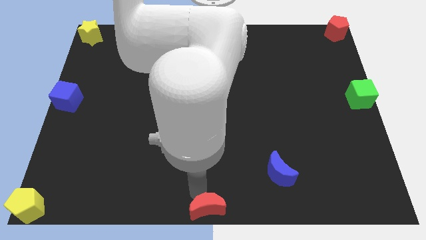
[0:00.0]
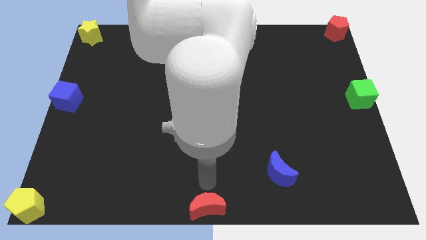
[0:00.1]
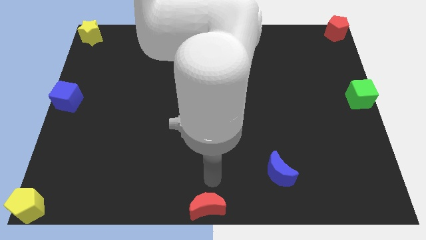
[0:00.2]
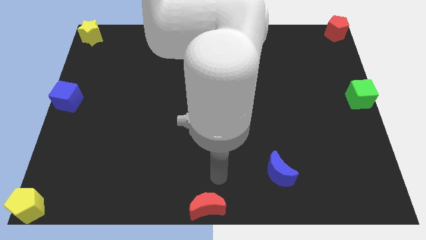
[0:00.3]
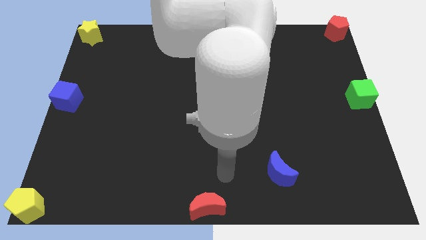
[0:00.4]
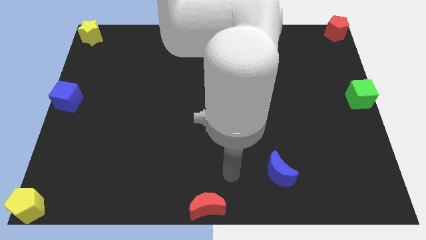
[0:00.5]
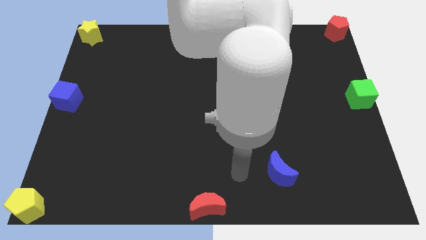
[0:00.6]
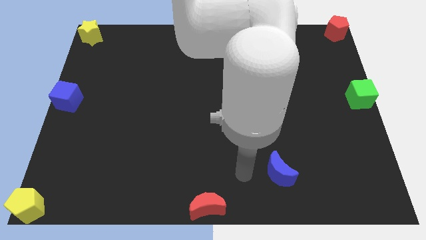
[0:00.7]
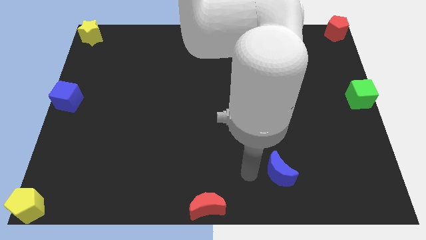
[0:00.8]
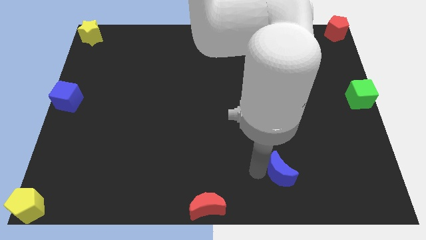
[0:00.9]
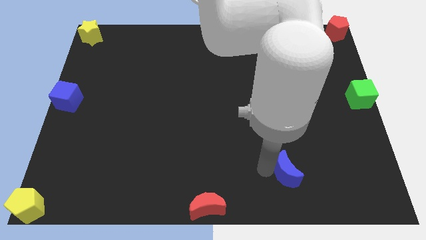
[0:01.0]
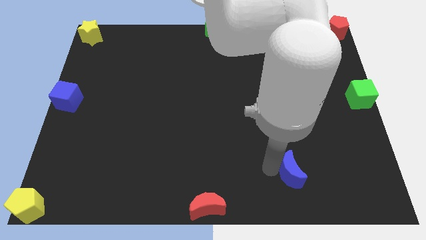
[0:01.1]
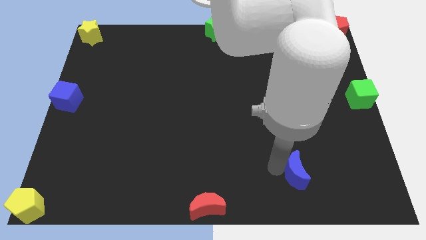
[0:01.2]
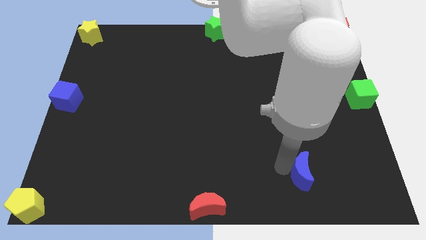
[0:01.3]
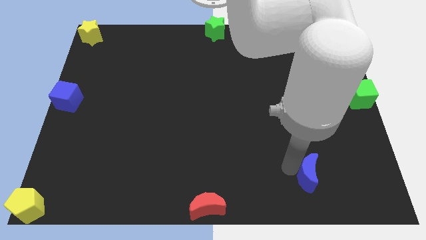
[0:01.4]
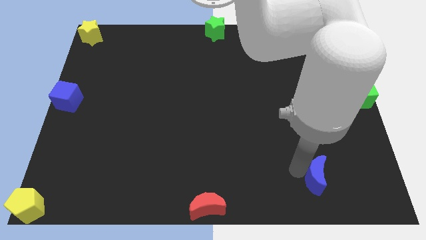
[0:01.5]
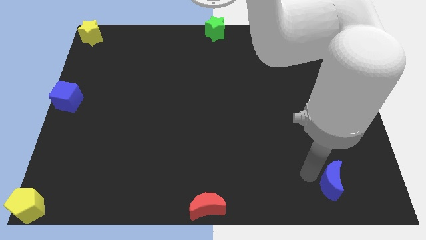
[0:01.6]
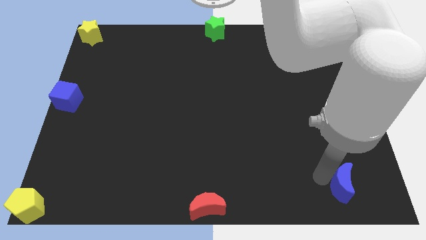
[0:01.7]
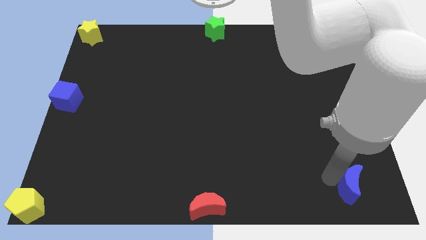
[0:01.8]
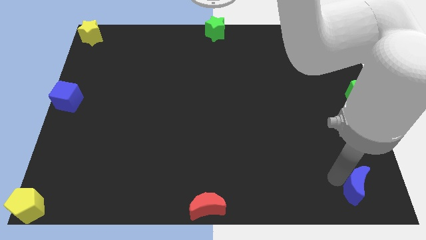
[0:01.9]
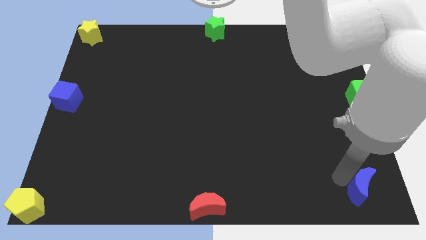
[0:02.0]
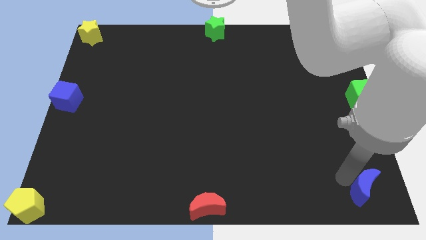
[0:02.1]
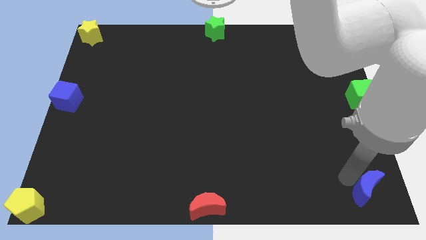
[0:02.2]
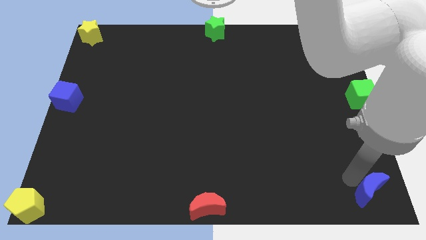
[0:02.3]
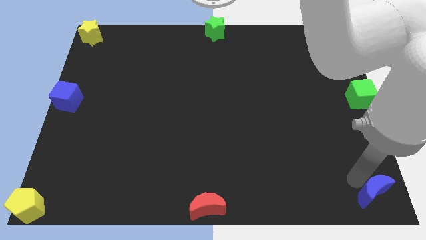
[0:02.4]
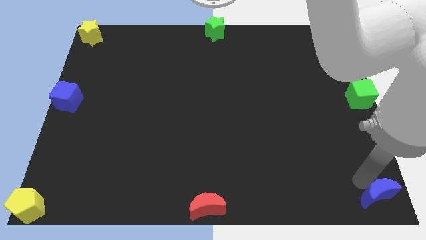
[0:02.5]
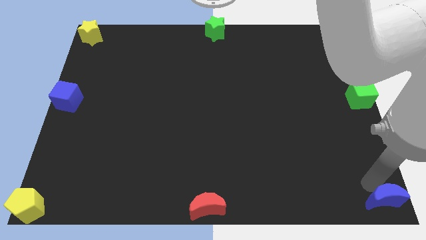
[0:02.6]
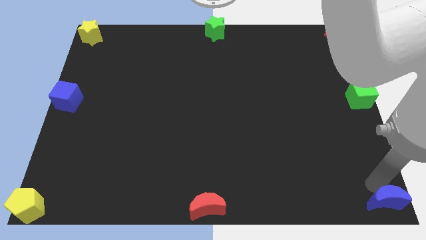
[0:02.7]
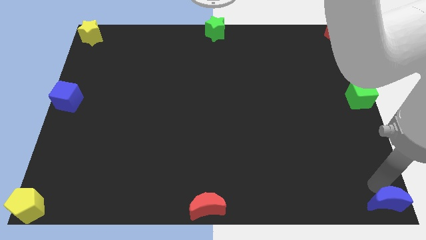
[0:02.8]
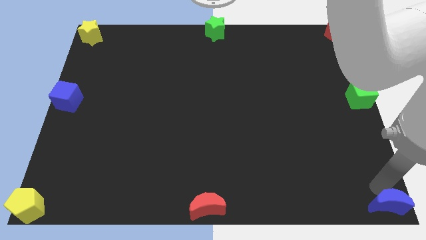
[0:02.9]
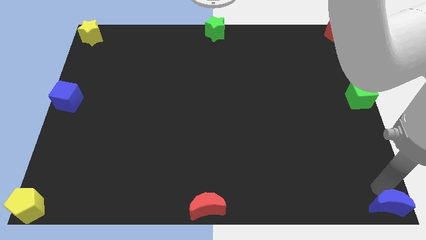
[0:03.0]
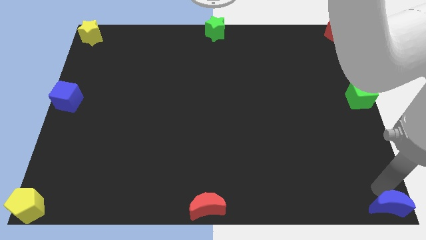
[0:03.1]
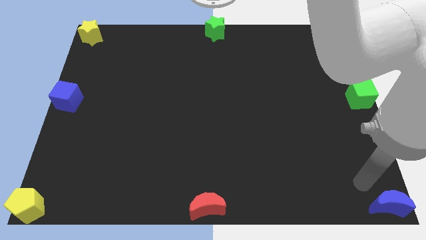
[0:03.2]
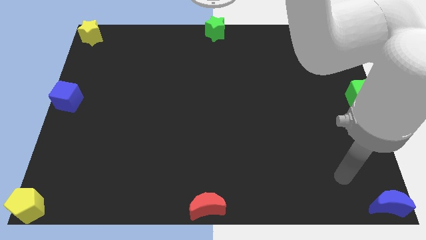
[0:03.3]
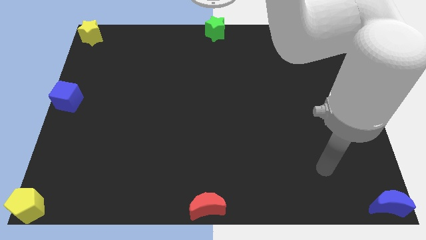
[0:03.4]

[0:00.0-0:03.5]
push the blue crescent towards the bottom right corner of the board

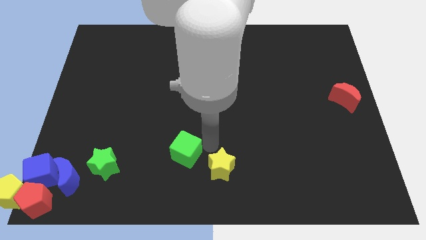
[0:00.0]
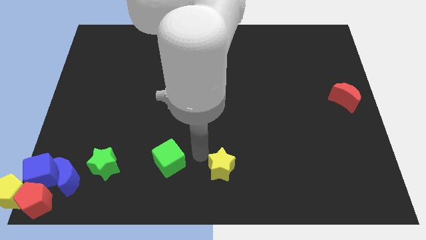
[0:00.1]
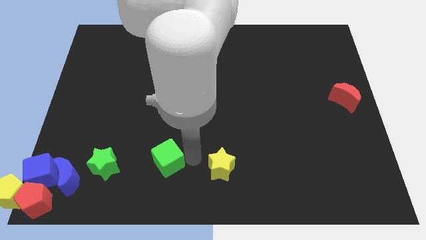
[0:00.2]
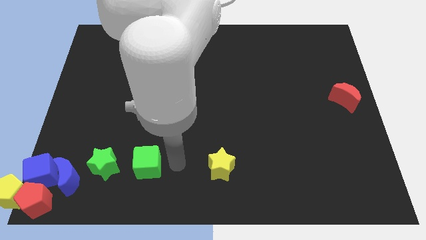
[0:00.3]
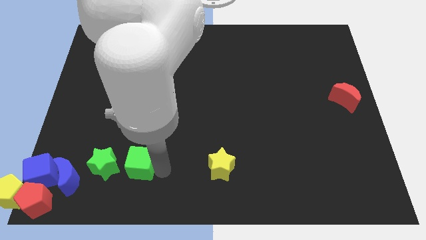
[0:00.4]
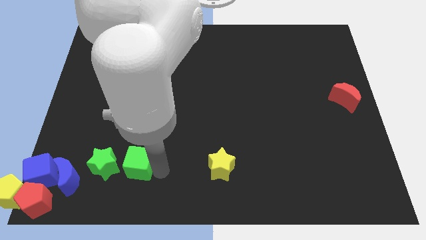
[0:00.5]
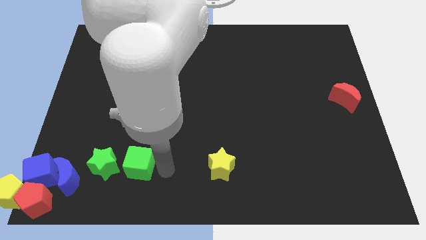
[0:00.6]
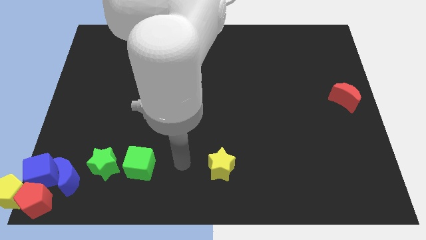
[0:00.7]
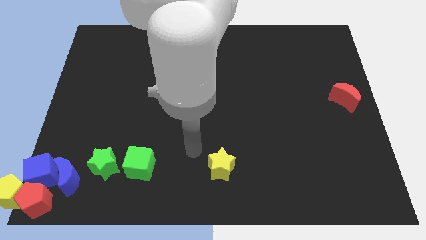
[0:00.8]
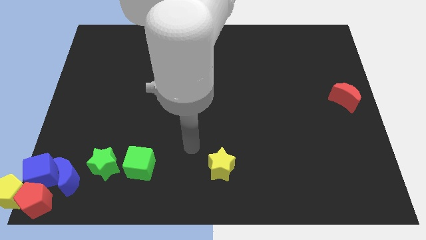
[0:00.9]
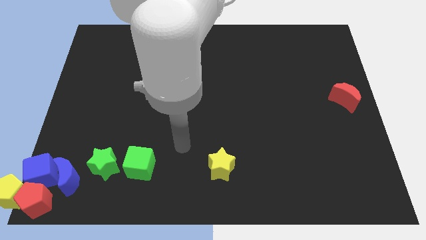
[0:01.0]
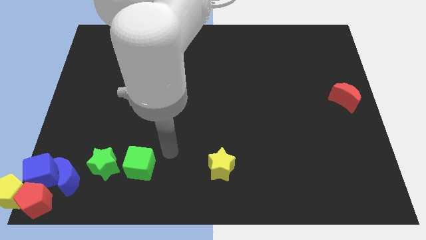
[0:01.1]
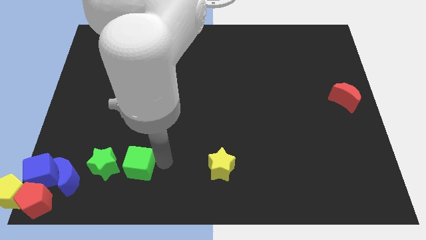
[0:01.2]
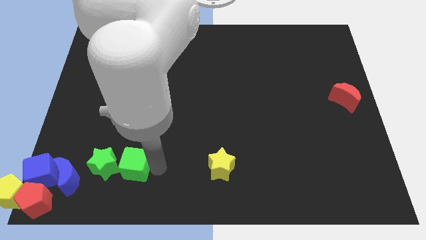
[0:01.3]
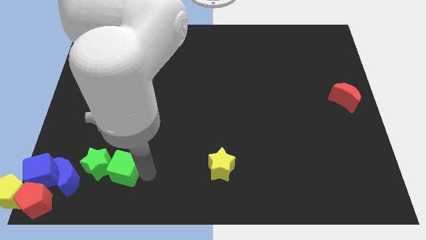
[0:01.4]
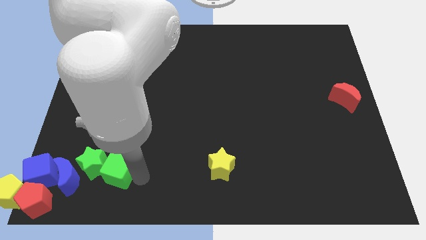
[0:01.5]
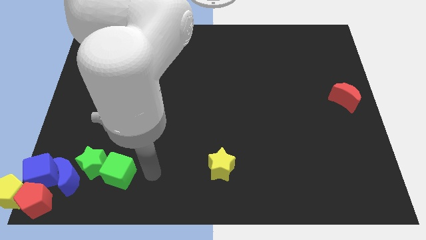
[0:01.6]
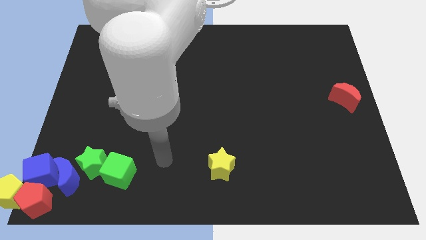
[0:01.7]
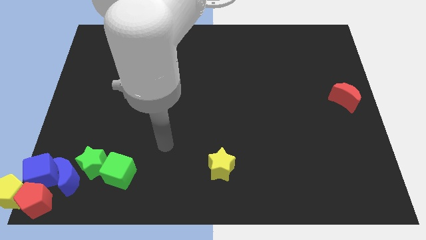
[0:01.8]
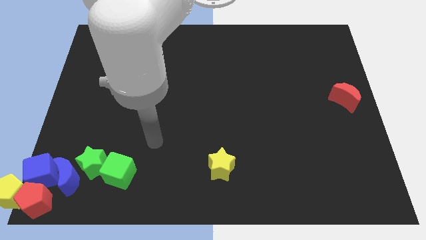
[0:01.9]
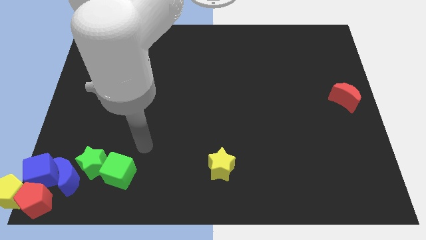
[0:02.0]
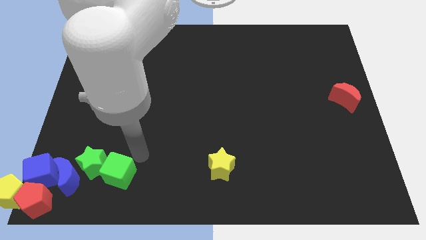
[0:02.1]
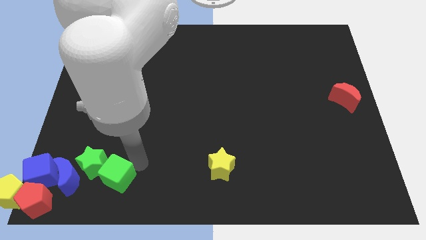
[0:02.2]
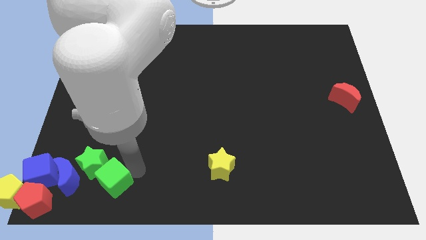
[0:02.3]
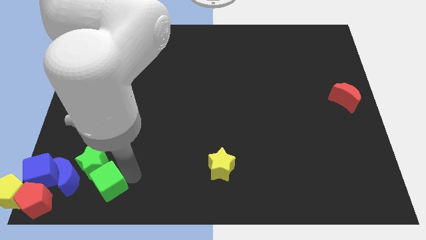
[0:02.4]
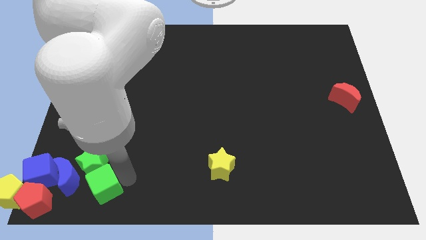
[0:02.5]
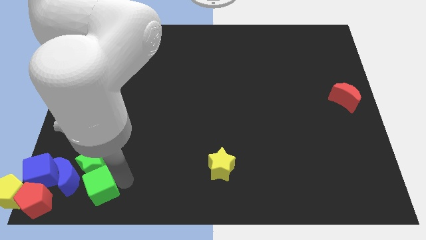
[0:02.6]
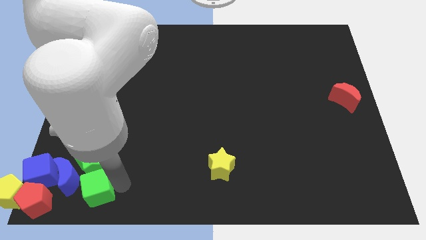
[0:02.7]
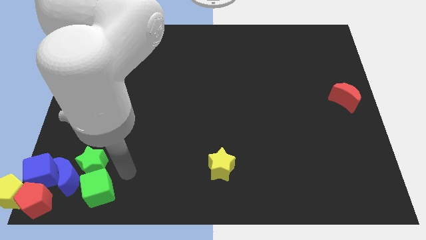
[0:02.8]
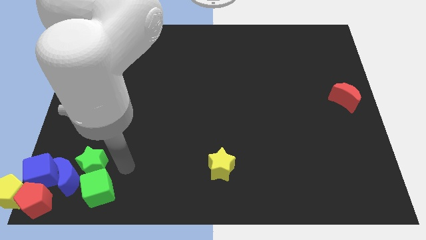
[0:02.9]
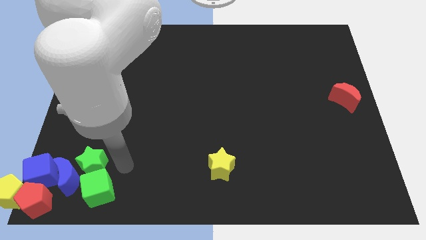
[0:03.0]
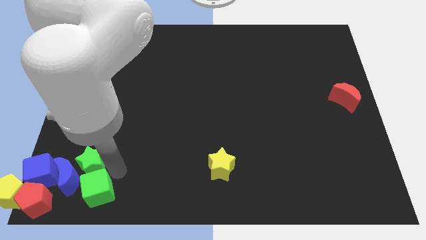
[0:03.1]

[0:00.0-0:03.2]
slide green cube to the bottom right of blue moon

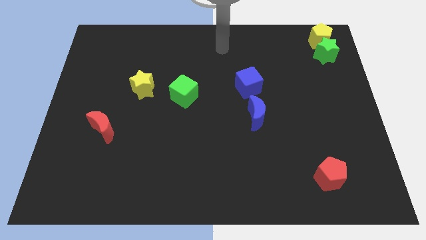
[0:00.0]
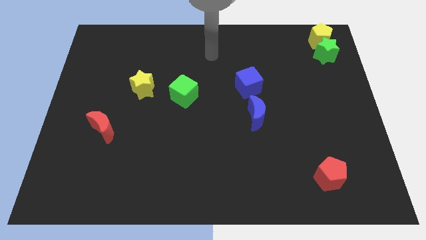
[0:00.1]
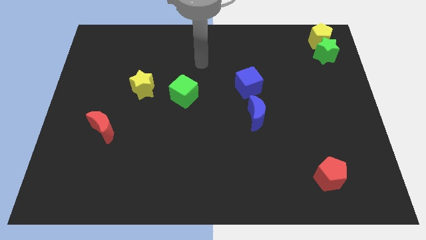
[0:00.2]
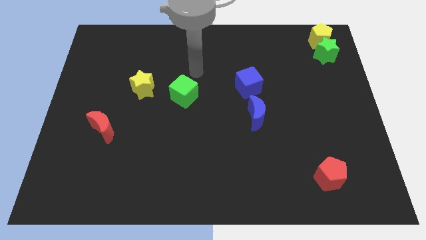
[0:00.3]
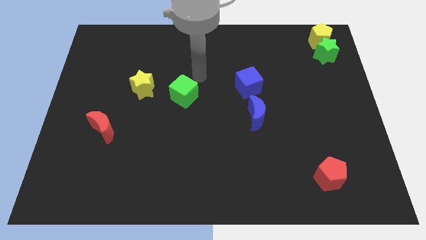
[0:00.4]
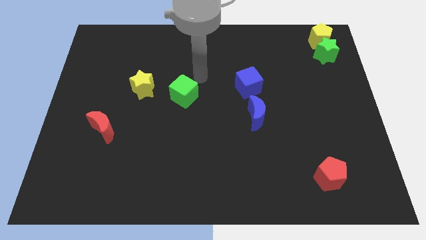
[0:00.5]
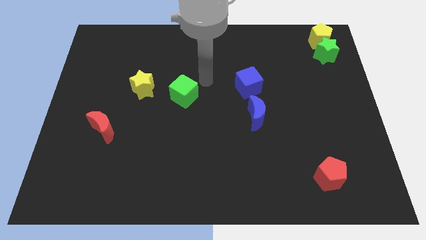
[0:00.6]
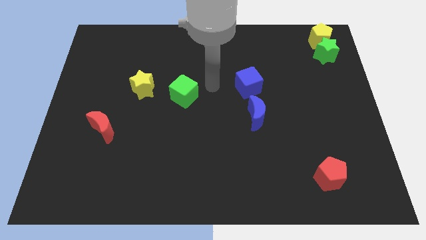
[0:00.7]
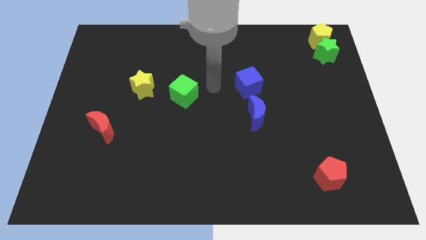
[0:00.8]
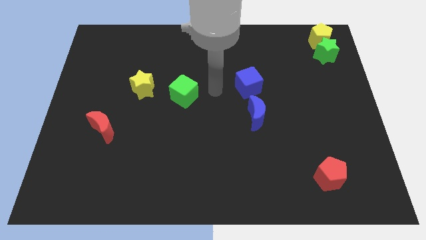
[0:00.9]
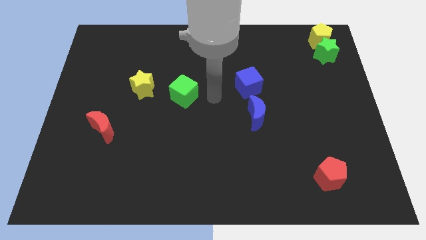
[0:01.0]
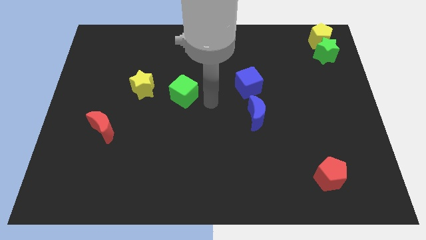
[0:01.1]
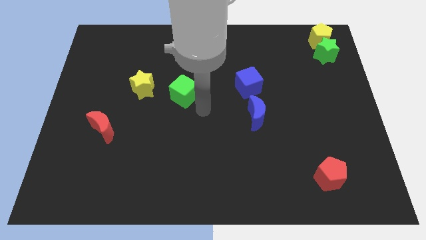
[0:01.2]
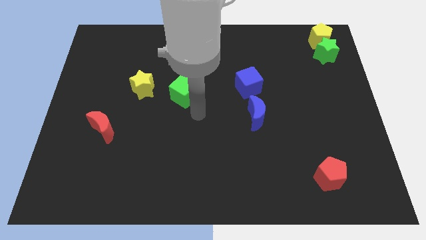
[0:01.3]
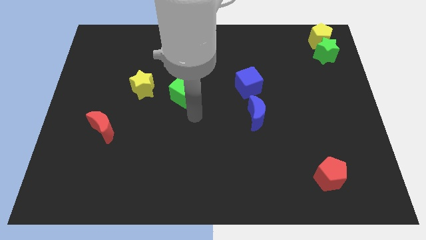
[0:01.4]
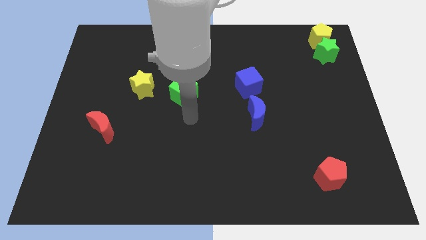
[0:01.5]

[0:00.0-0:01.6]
move your arm to the bottom of the green cube

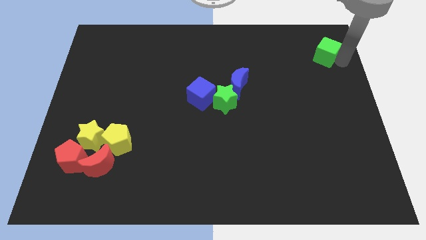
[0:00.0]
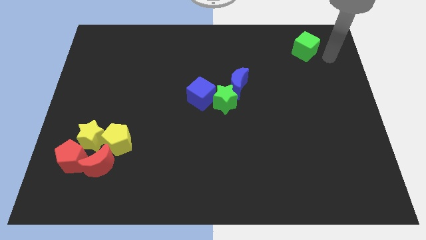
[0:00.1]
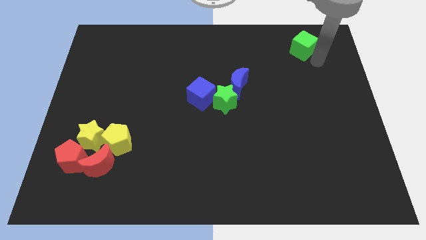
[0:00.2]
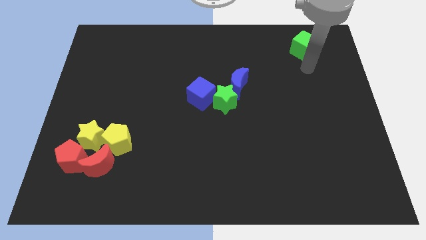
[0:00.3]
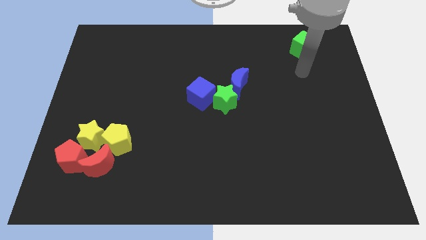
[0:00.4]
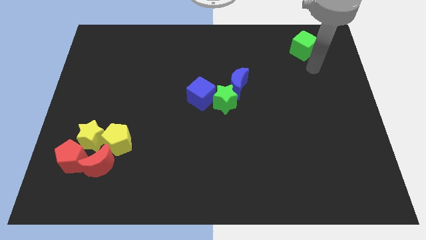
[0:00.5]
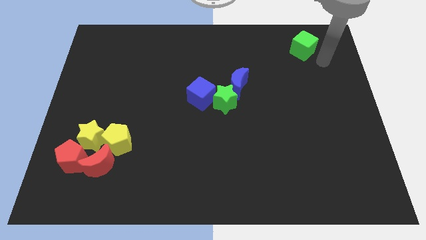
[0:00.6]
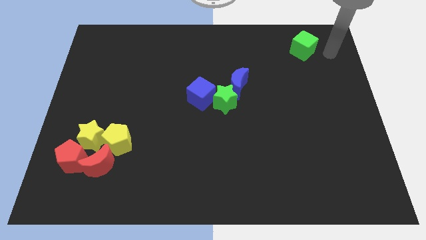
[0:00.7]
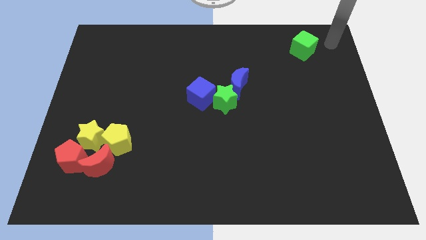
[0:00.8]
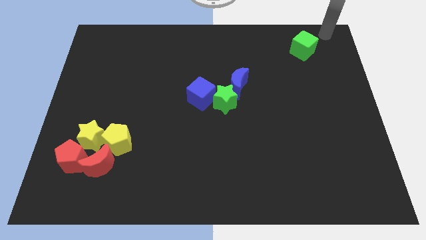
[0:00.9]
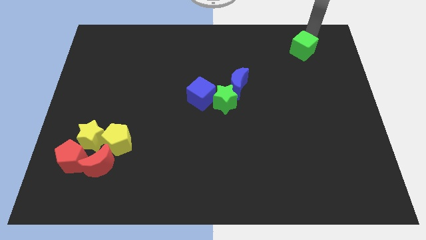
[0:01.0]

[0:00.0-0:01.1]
push the green cube to the top of the board
